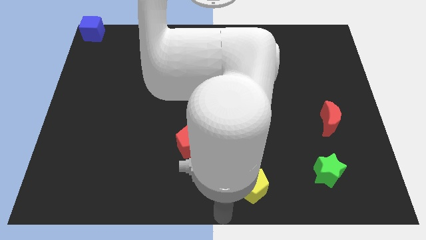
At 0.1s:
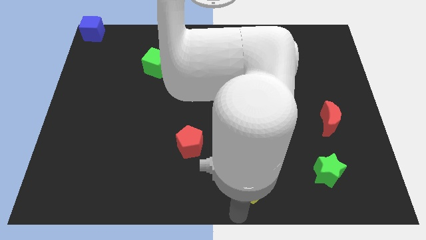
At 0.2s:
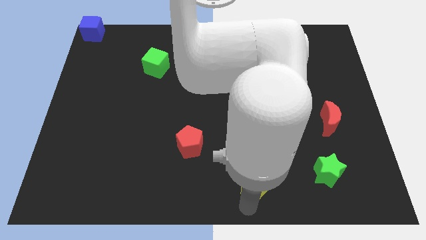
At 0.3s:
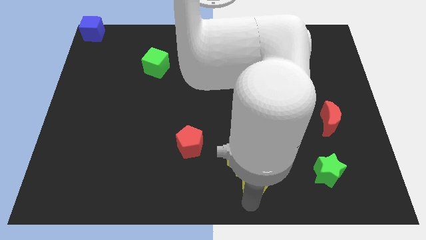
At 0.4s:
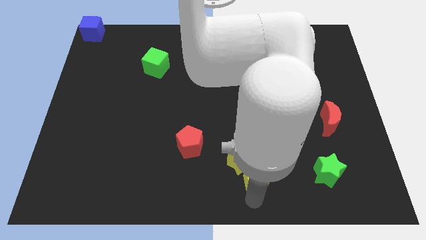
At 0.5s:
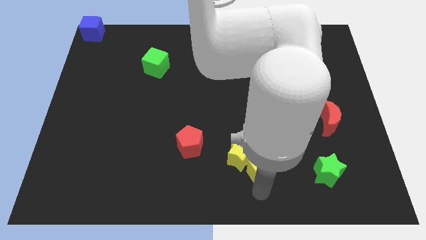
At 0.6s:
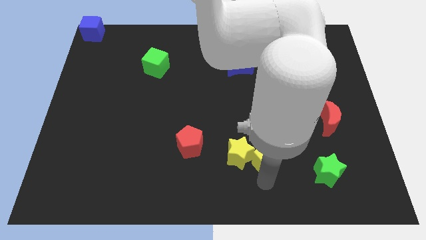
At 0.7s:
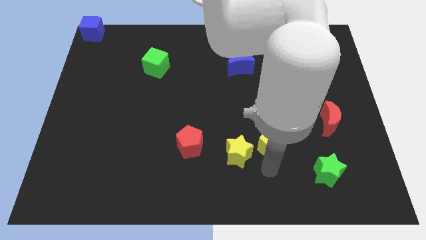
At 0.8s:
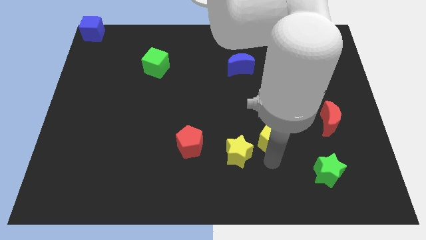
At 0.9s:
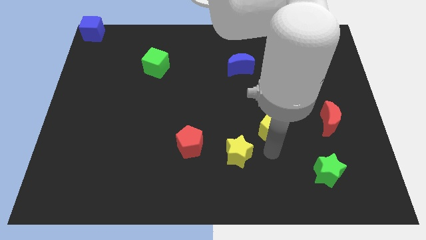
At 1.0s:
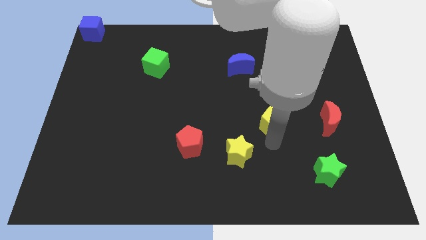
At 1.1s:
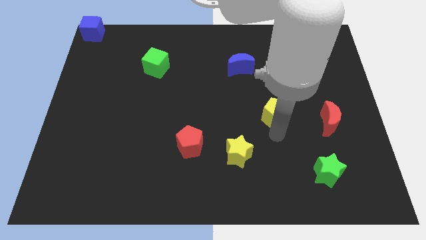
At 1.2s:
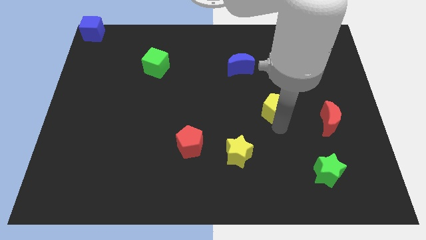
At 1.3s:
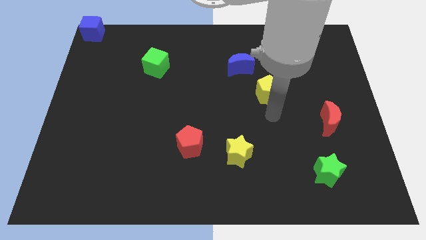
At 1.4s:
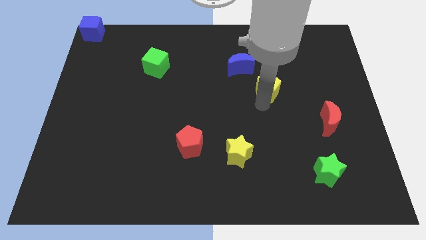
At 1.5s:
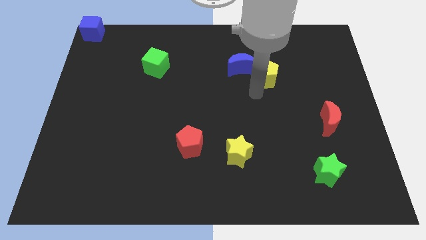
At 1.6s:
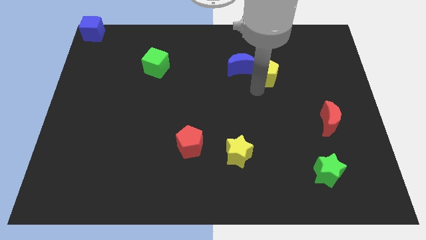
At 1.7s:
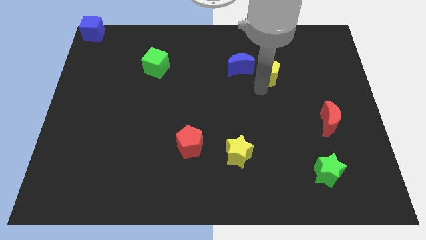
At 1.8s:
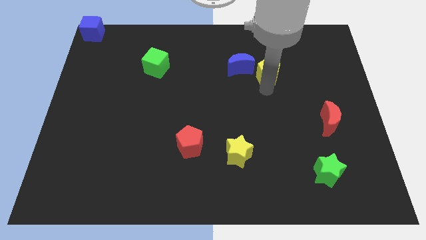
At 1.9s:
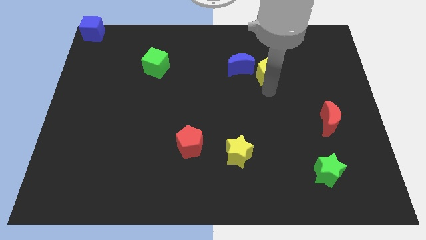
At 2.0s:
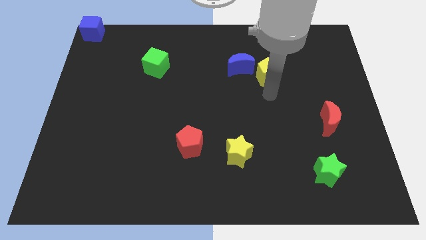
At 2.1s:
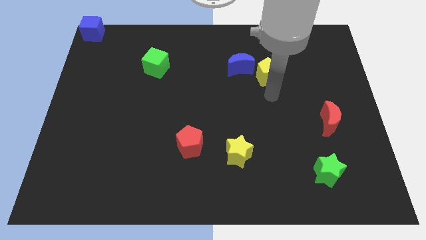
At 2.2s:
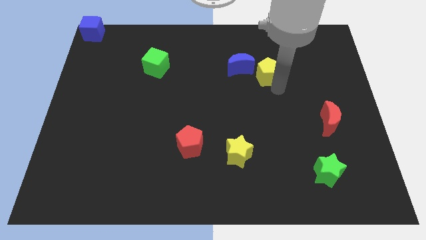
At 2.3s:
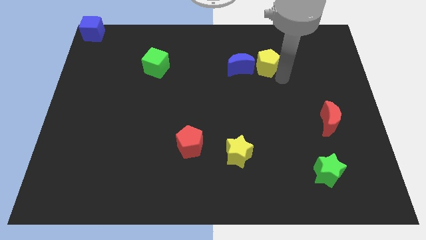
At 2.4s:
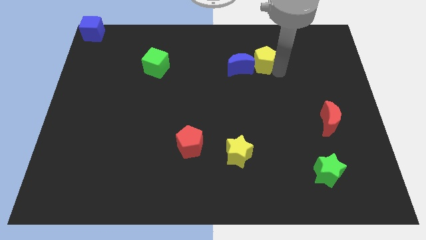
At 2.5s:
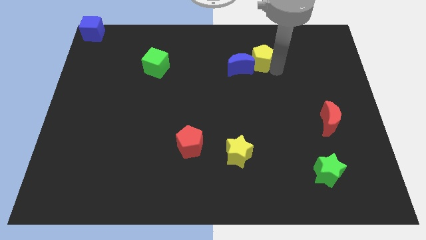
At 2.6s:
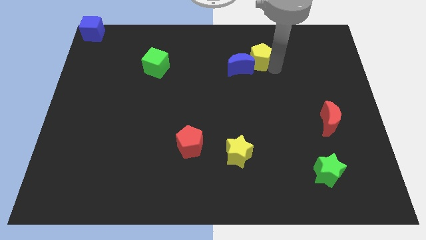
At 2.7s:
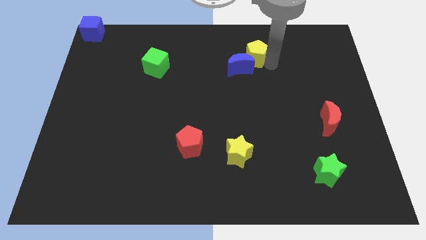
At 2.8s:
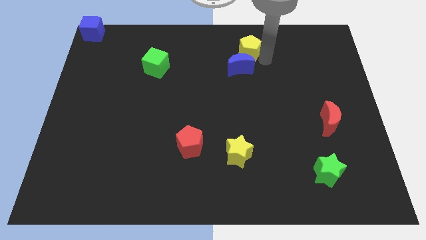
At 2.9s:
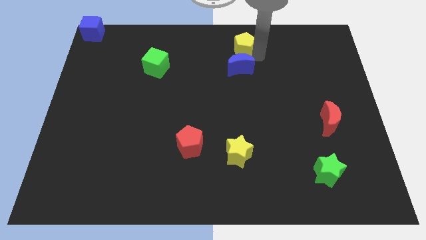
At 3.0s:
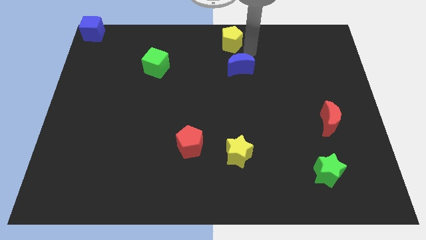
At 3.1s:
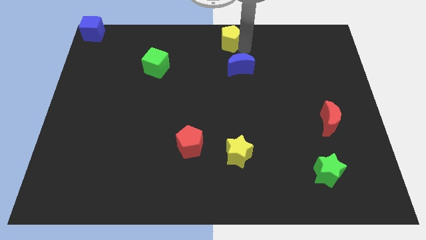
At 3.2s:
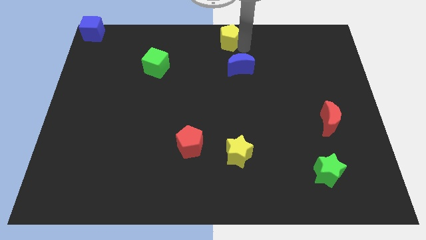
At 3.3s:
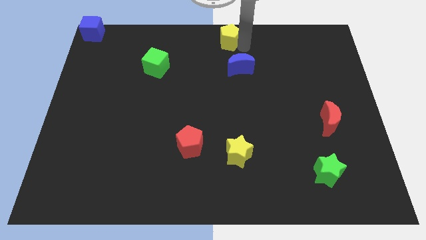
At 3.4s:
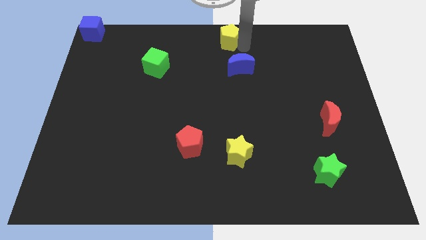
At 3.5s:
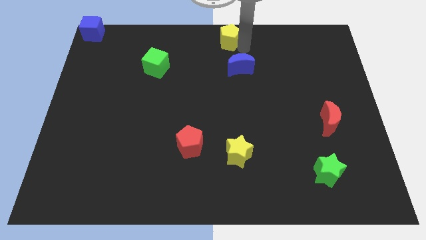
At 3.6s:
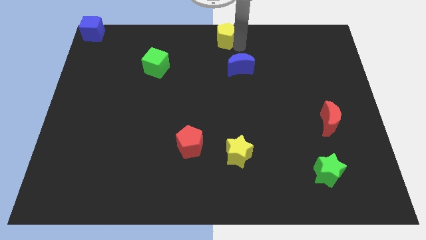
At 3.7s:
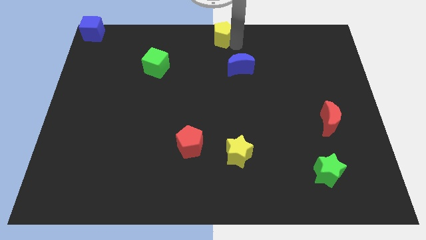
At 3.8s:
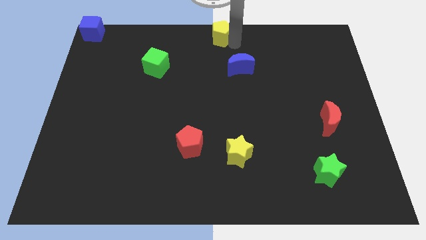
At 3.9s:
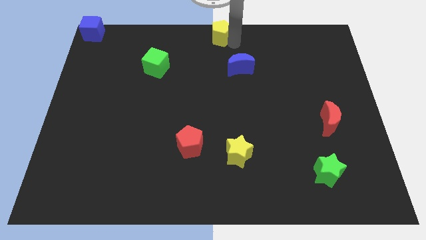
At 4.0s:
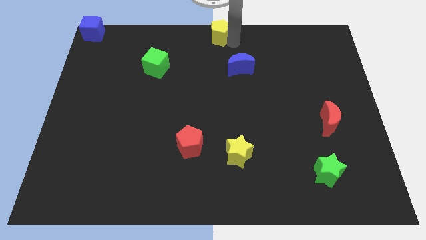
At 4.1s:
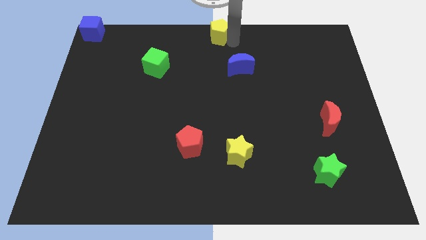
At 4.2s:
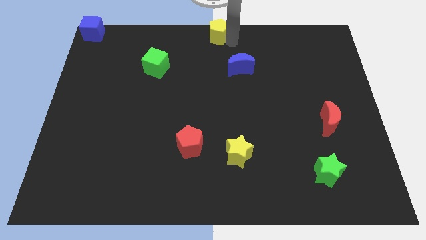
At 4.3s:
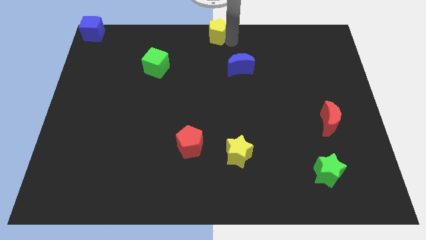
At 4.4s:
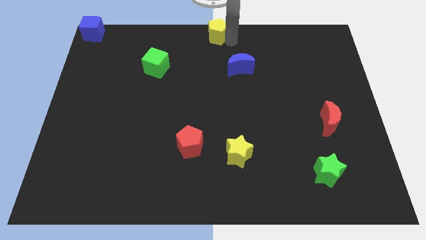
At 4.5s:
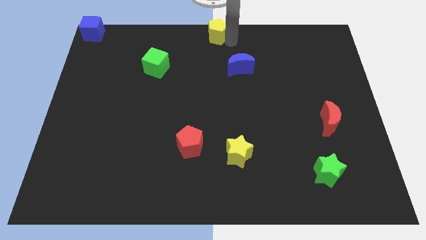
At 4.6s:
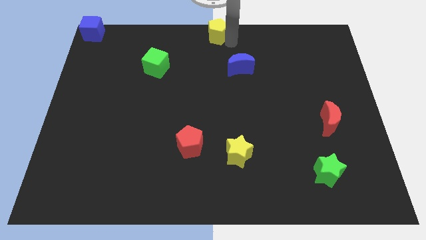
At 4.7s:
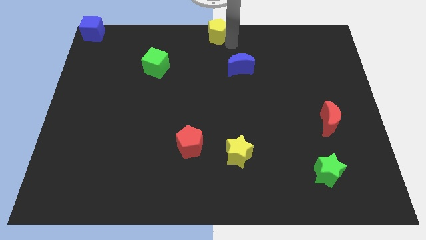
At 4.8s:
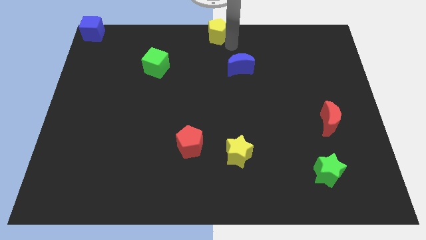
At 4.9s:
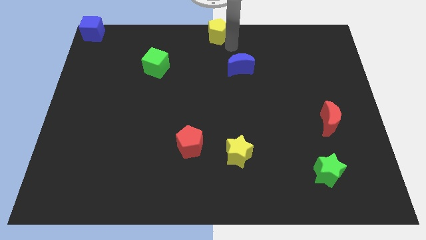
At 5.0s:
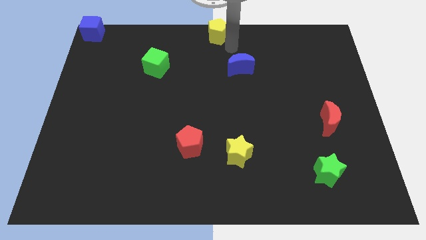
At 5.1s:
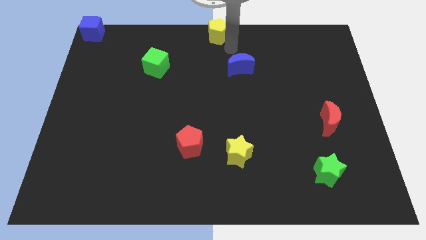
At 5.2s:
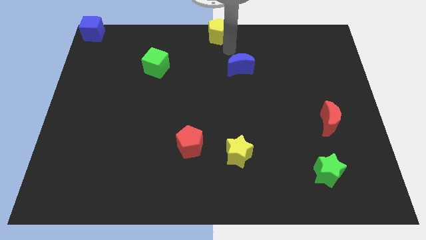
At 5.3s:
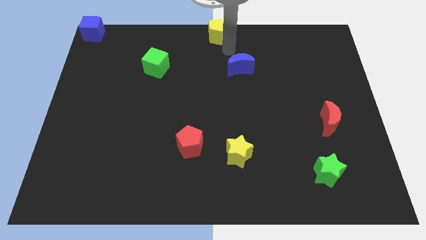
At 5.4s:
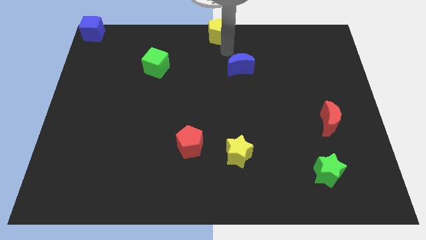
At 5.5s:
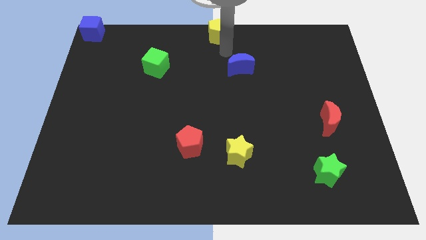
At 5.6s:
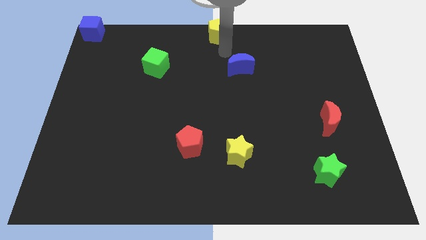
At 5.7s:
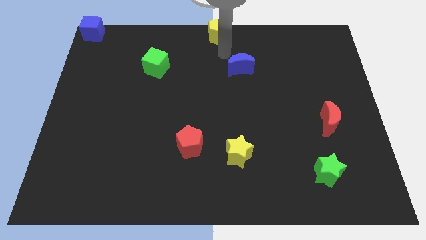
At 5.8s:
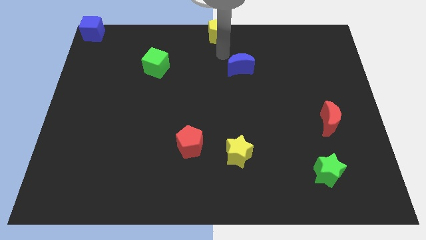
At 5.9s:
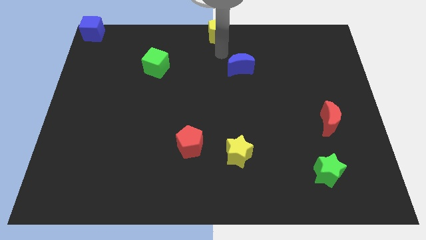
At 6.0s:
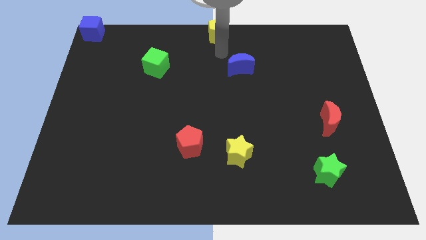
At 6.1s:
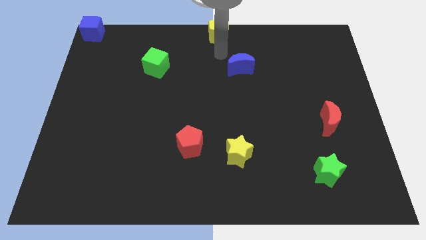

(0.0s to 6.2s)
separate the yellow pentagon from the yellow star

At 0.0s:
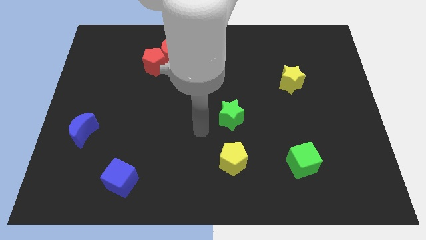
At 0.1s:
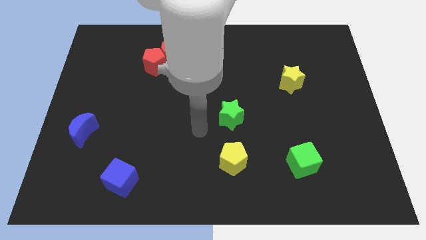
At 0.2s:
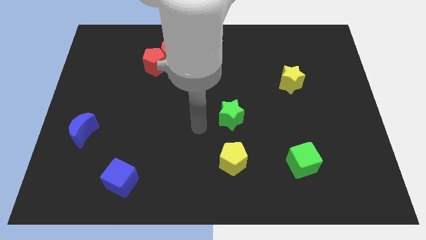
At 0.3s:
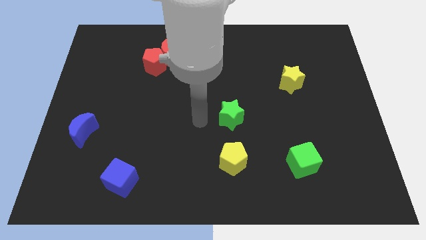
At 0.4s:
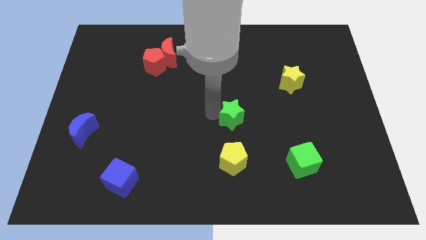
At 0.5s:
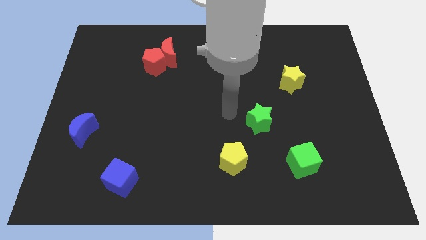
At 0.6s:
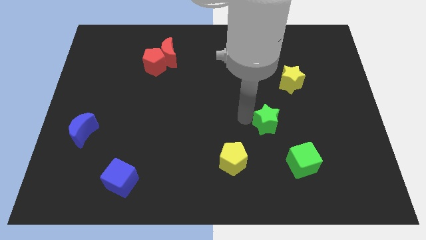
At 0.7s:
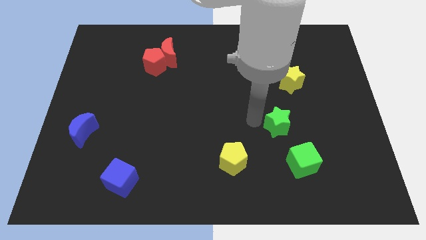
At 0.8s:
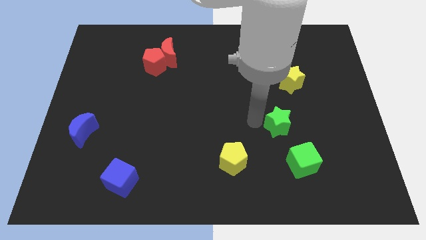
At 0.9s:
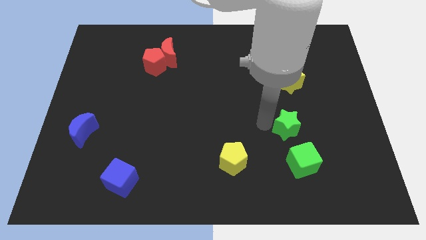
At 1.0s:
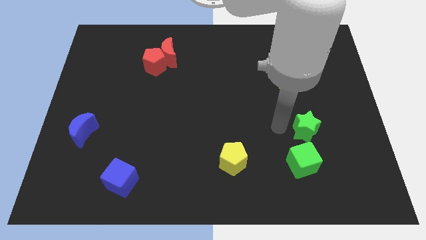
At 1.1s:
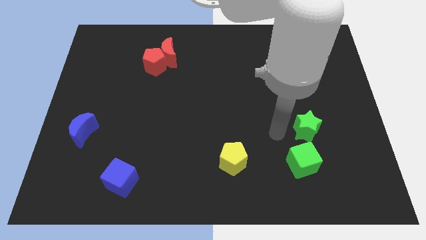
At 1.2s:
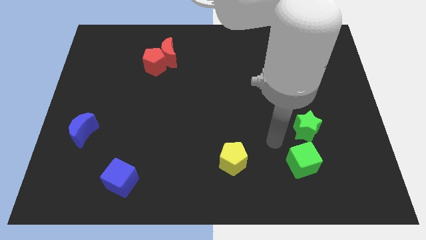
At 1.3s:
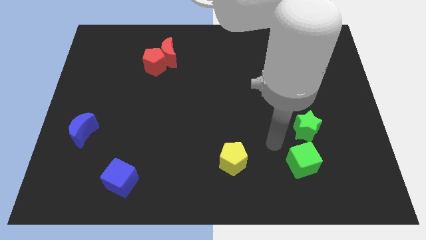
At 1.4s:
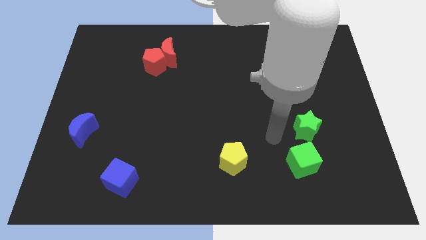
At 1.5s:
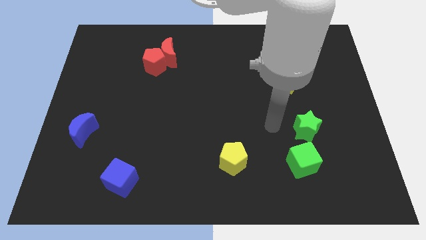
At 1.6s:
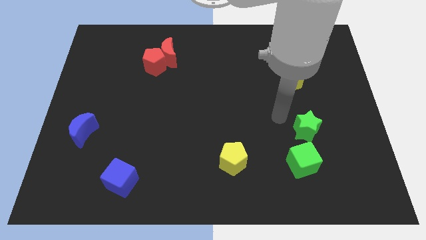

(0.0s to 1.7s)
slide the green star towards the right side of the board

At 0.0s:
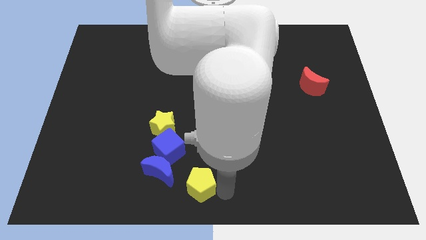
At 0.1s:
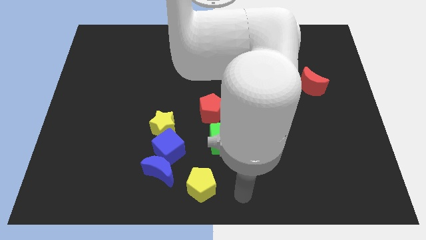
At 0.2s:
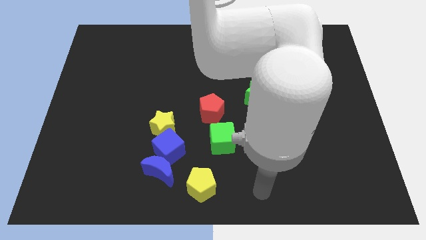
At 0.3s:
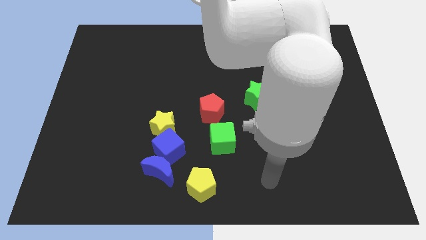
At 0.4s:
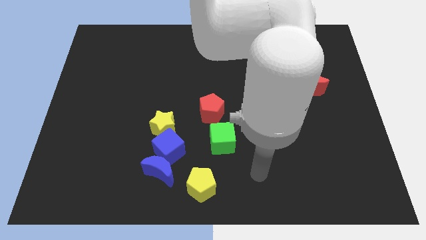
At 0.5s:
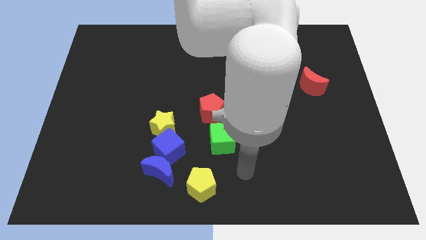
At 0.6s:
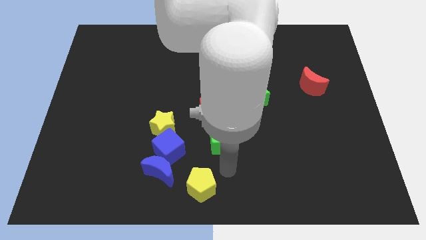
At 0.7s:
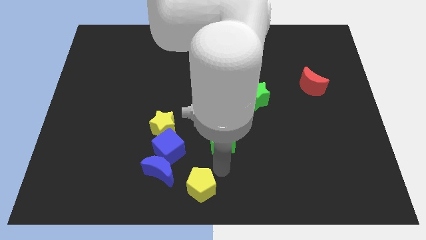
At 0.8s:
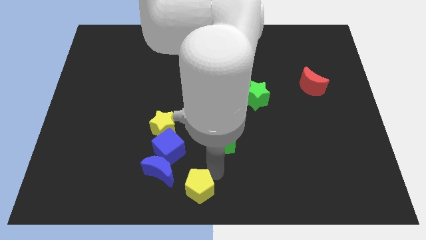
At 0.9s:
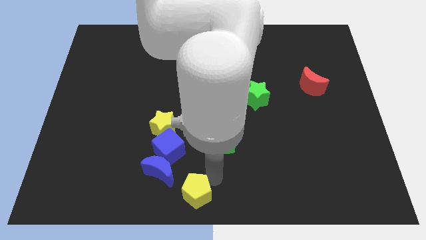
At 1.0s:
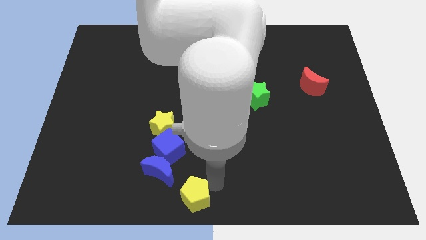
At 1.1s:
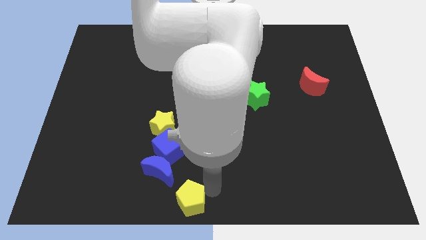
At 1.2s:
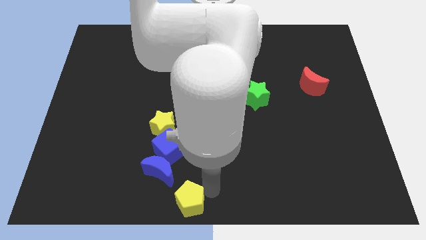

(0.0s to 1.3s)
place the yellow pentagon diagonally below the bottom right side of the blue crescent
